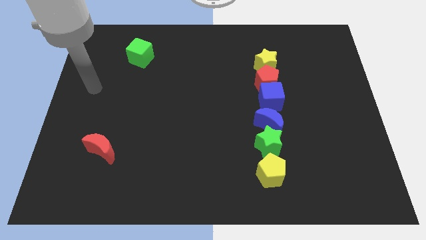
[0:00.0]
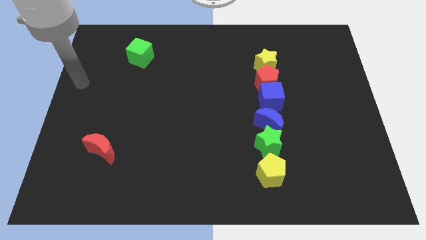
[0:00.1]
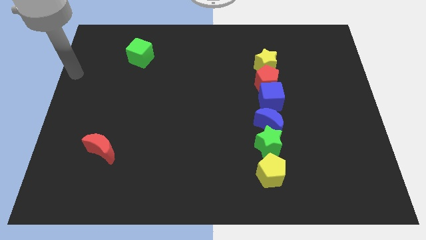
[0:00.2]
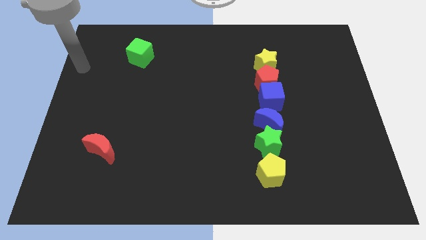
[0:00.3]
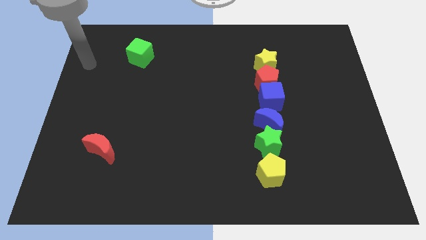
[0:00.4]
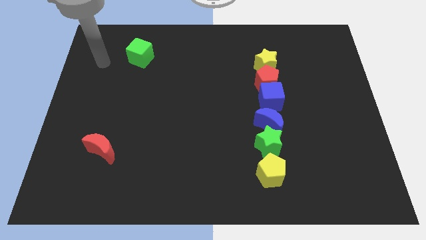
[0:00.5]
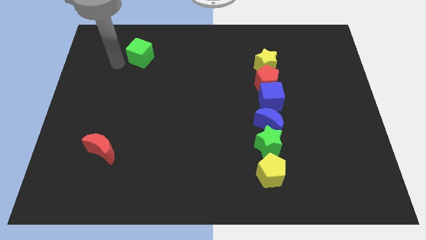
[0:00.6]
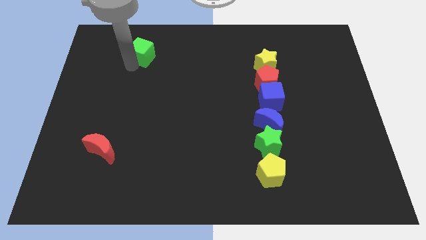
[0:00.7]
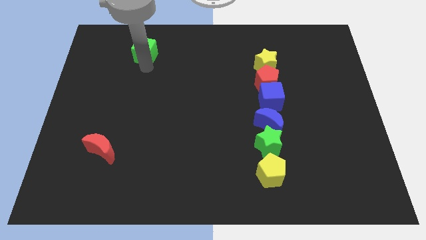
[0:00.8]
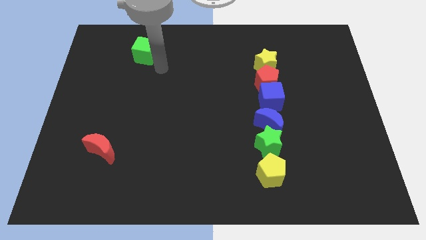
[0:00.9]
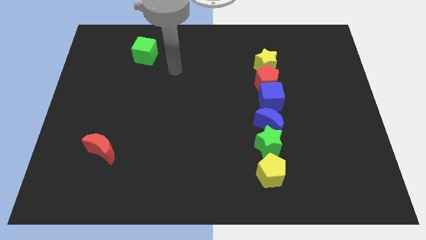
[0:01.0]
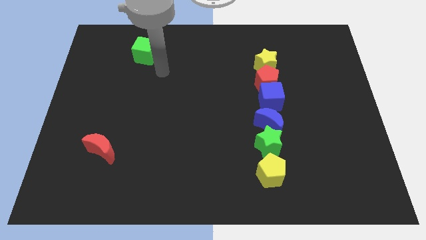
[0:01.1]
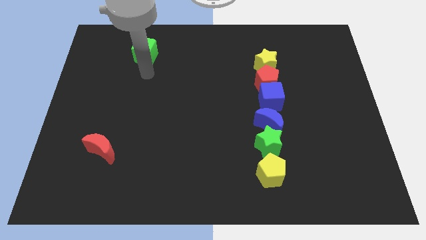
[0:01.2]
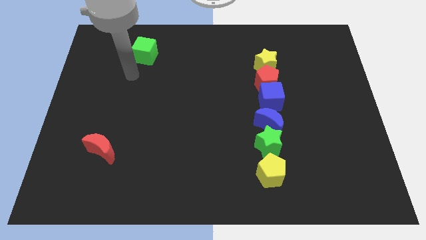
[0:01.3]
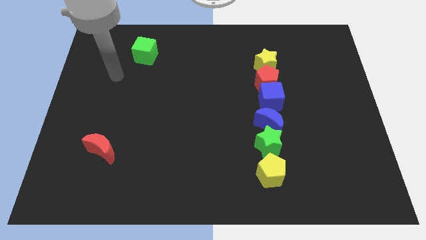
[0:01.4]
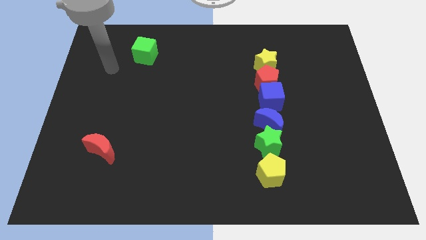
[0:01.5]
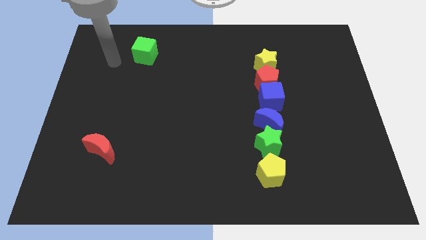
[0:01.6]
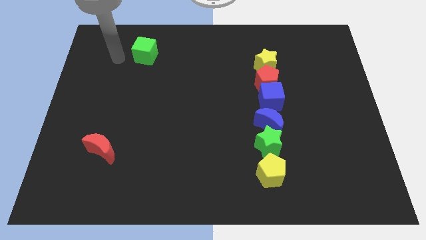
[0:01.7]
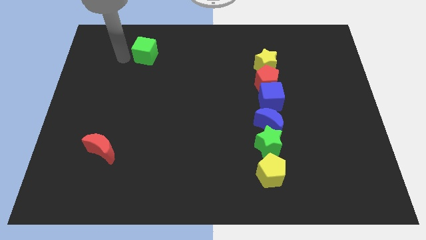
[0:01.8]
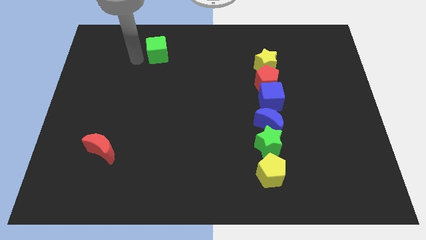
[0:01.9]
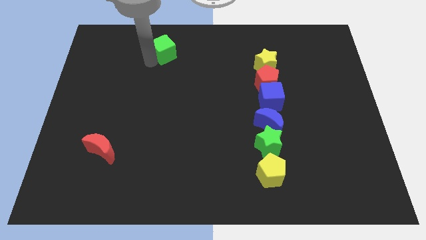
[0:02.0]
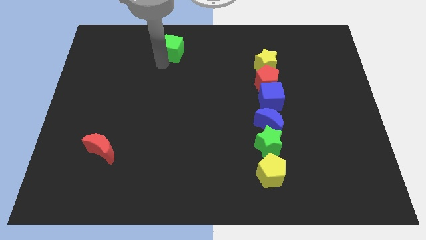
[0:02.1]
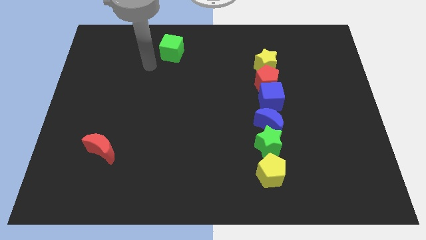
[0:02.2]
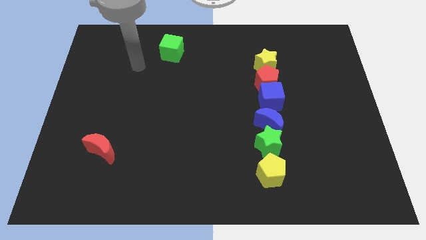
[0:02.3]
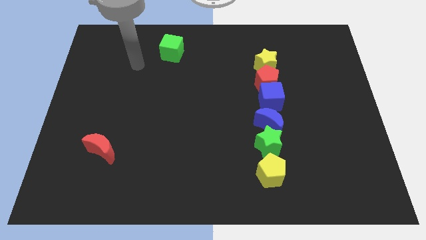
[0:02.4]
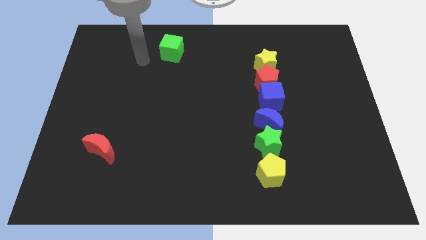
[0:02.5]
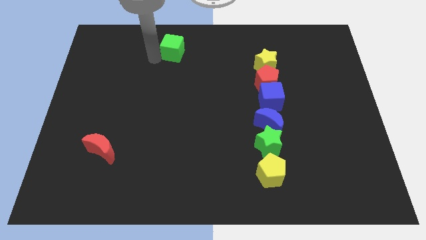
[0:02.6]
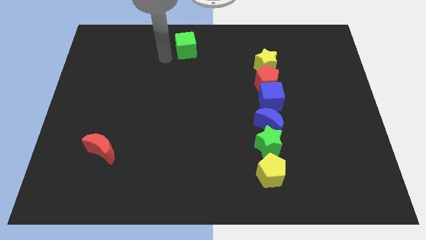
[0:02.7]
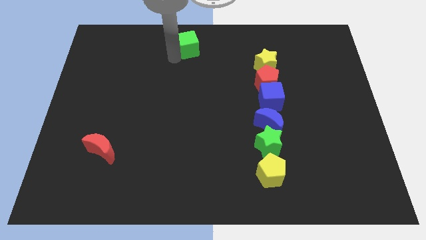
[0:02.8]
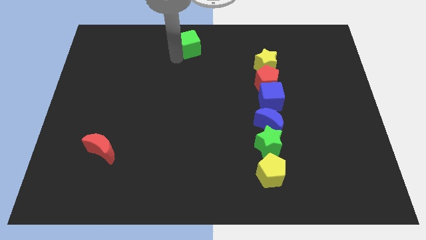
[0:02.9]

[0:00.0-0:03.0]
push the green cube slightly to the right

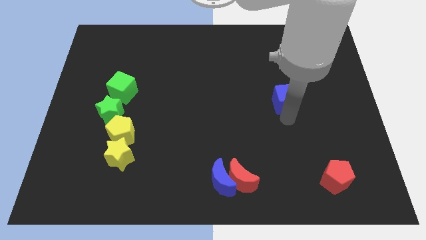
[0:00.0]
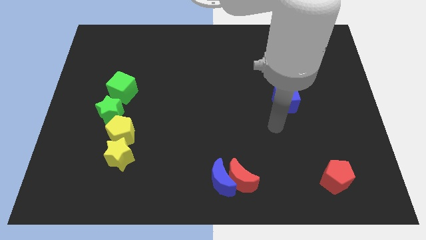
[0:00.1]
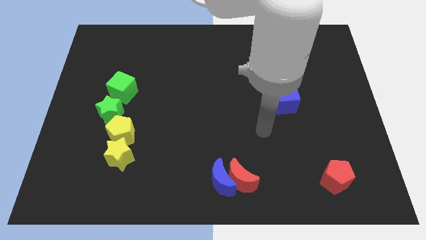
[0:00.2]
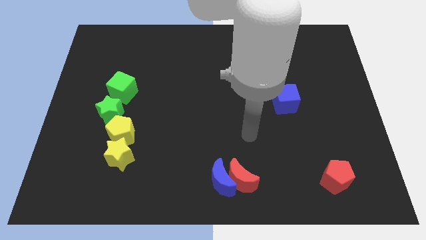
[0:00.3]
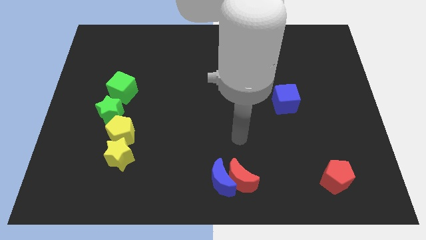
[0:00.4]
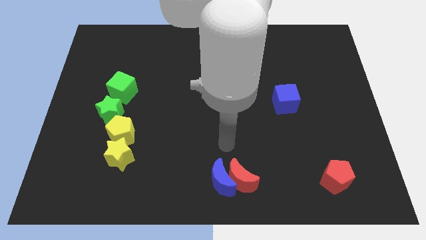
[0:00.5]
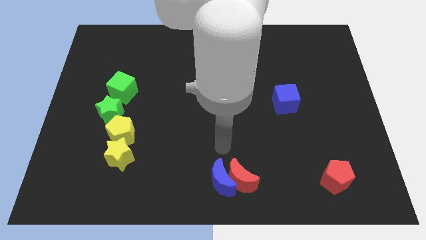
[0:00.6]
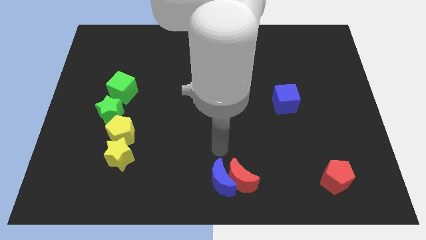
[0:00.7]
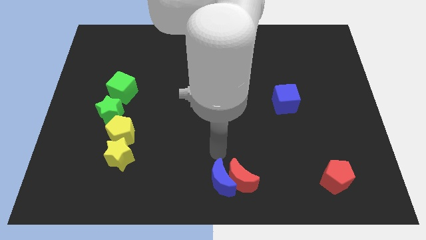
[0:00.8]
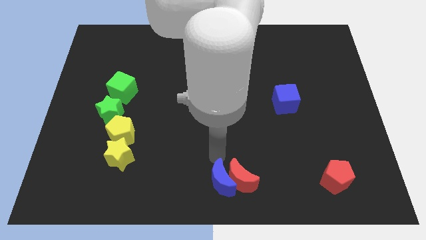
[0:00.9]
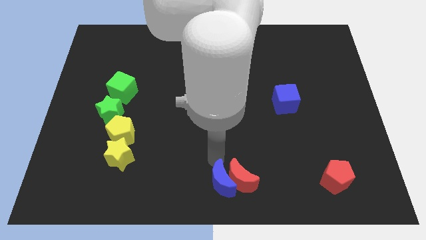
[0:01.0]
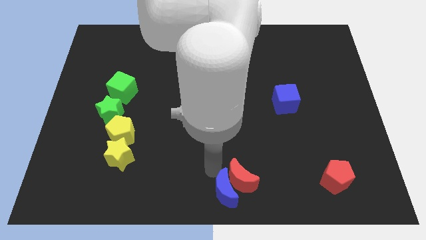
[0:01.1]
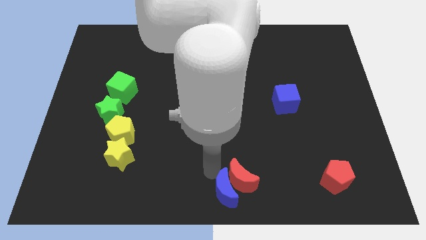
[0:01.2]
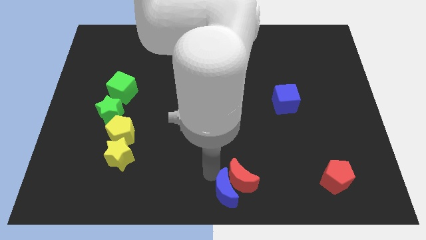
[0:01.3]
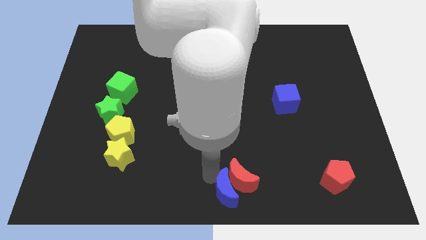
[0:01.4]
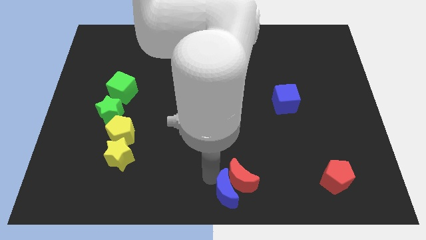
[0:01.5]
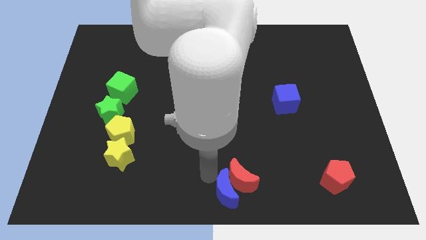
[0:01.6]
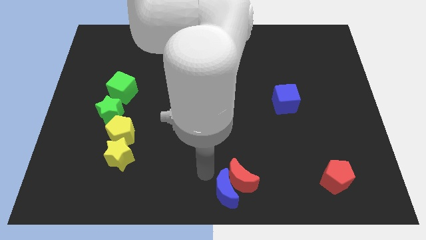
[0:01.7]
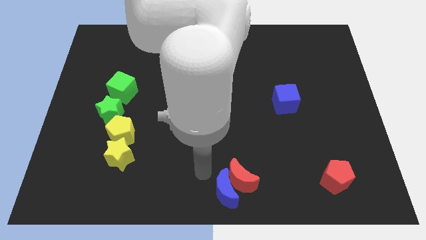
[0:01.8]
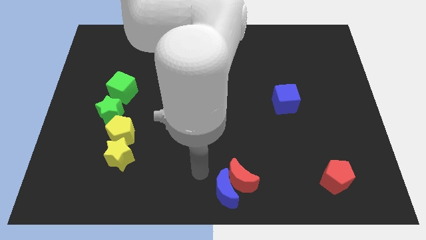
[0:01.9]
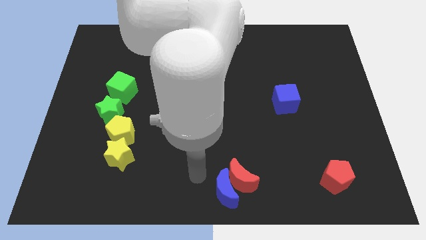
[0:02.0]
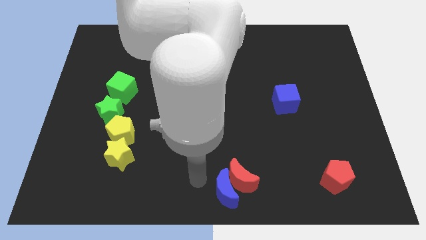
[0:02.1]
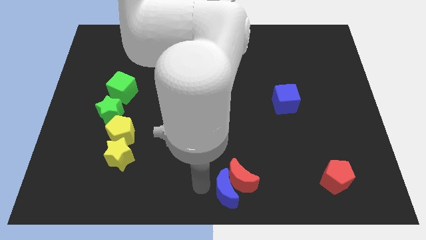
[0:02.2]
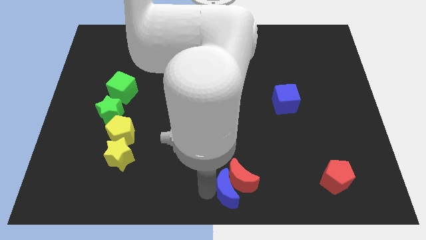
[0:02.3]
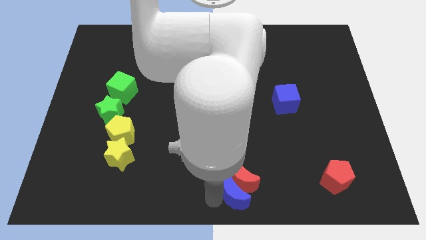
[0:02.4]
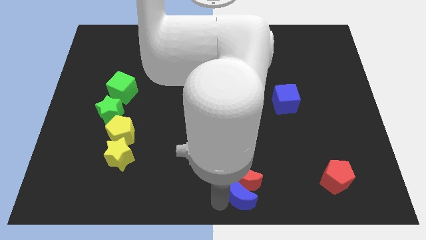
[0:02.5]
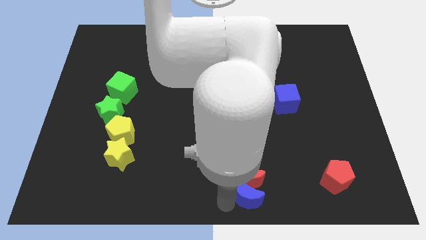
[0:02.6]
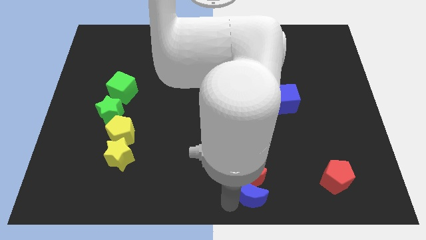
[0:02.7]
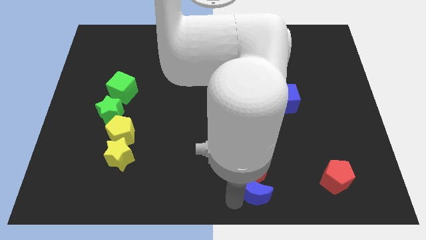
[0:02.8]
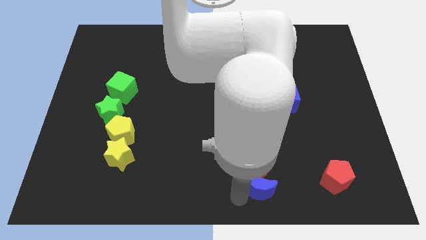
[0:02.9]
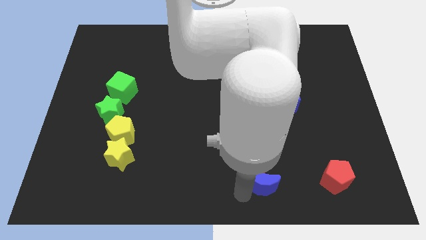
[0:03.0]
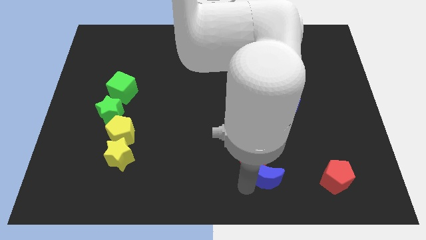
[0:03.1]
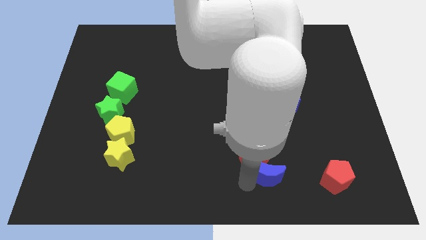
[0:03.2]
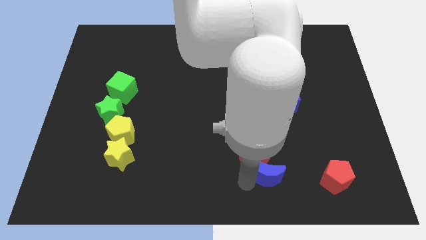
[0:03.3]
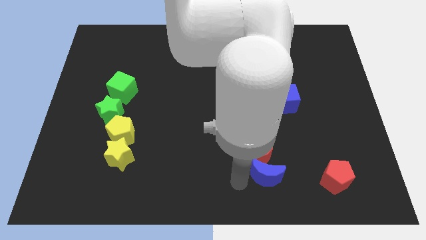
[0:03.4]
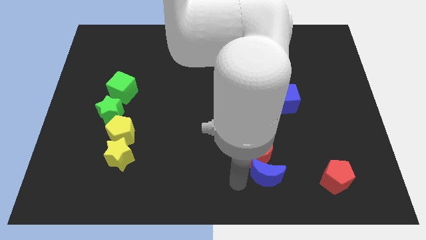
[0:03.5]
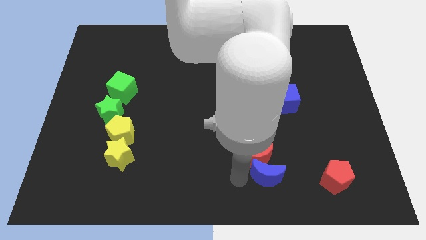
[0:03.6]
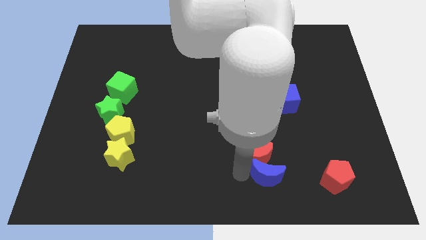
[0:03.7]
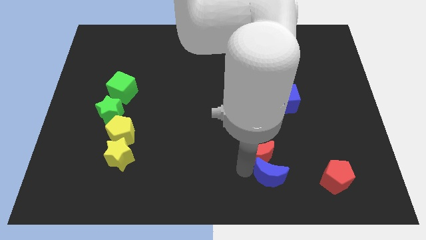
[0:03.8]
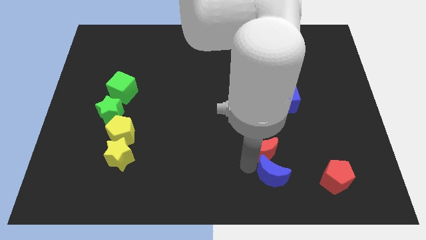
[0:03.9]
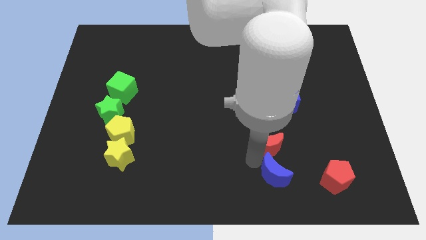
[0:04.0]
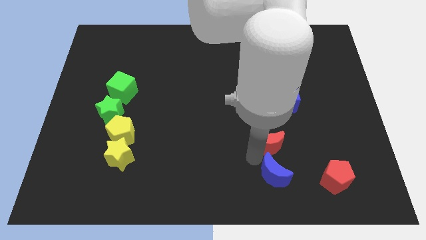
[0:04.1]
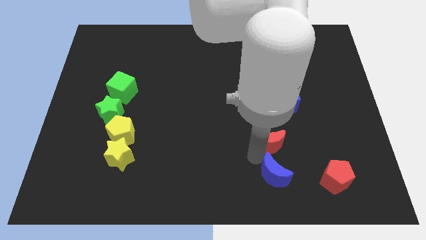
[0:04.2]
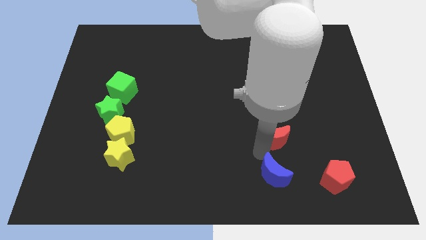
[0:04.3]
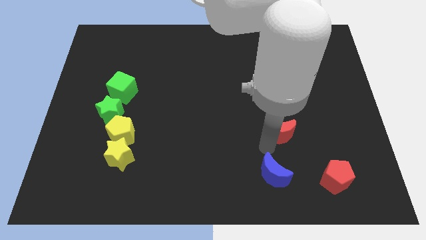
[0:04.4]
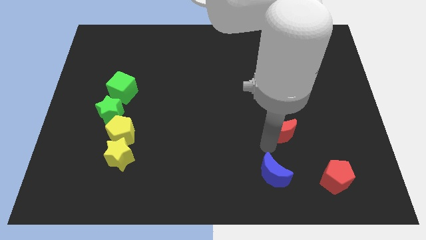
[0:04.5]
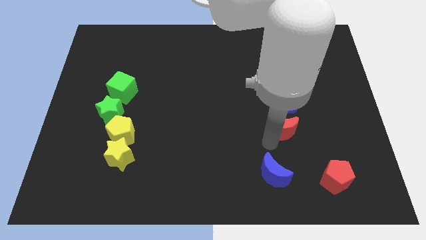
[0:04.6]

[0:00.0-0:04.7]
separate the red recent from the blue semi circle

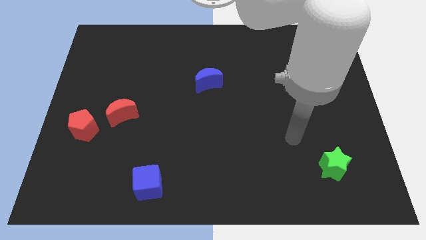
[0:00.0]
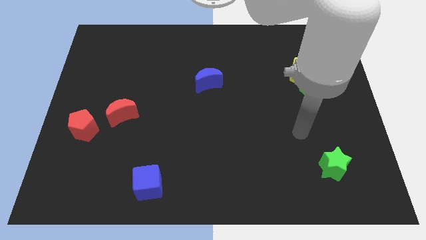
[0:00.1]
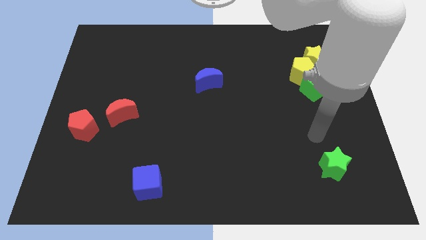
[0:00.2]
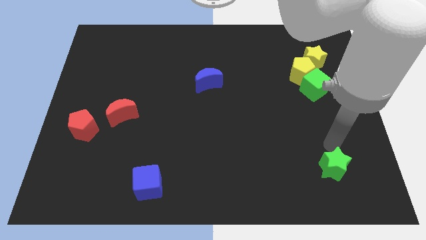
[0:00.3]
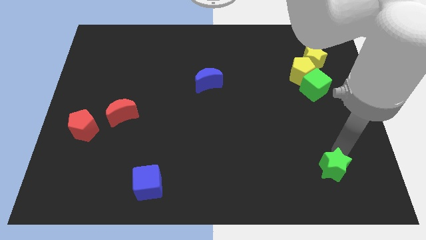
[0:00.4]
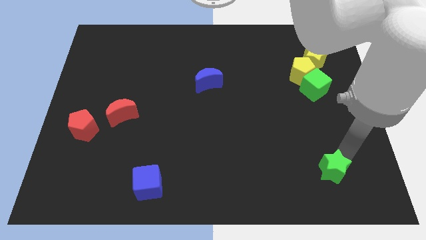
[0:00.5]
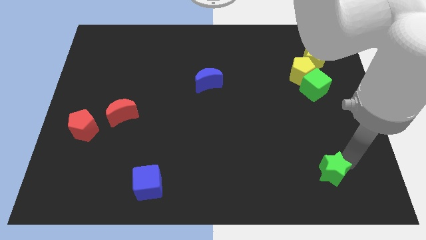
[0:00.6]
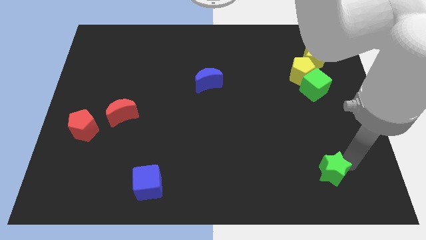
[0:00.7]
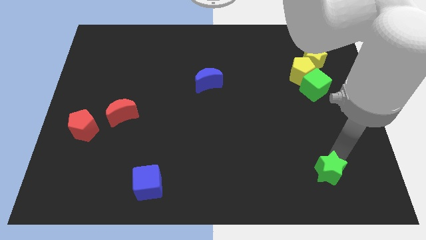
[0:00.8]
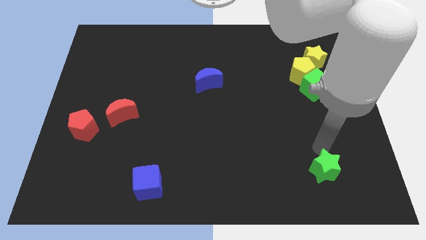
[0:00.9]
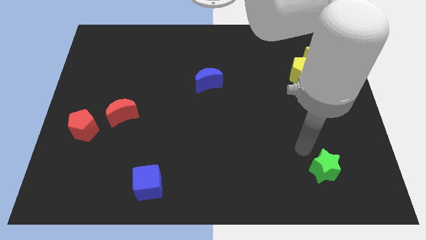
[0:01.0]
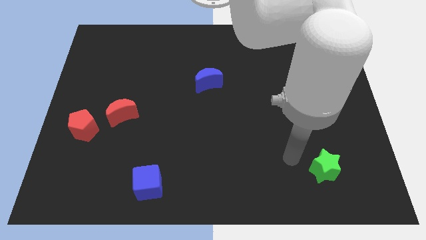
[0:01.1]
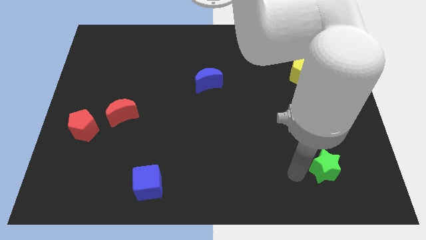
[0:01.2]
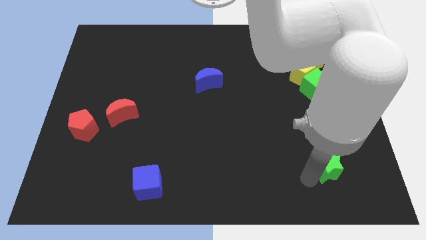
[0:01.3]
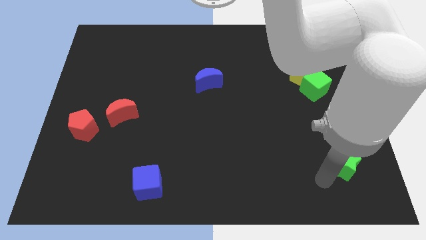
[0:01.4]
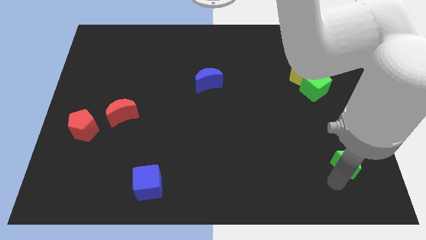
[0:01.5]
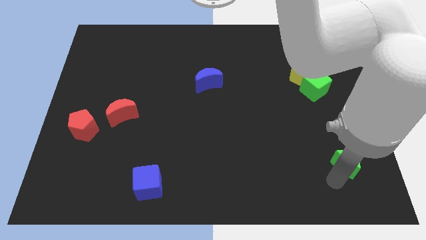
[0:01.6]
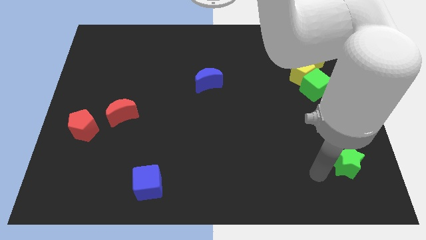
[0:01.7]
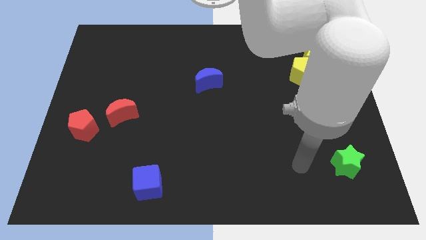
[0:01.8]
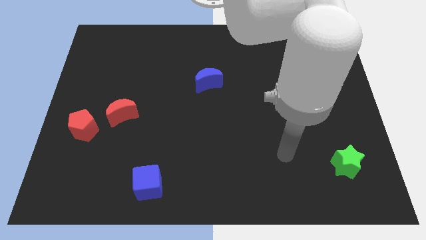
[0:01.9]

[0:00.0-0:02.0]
slide the green star slightly to the right
